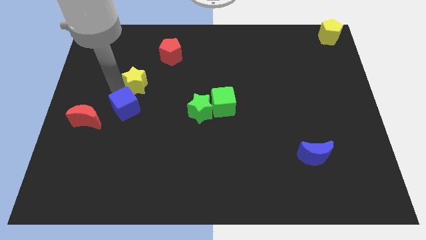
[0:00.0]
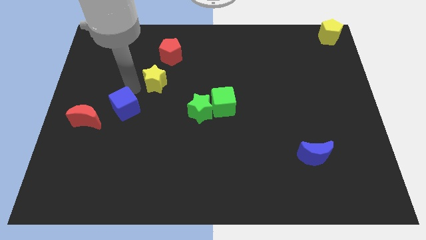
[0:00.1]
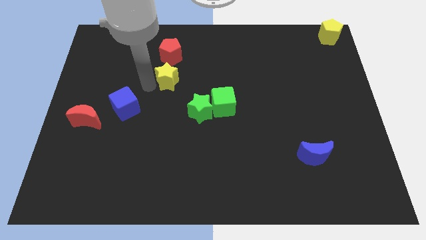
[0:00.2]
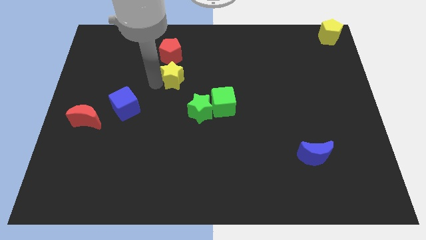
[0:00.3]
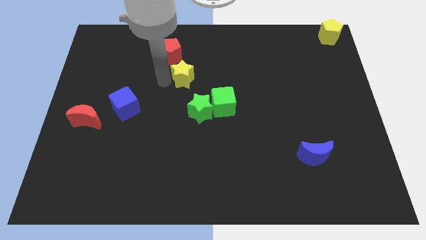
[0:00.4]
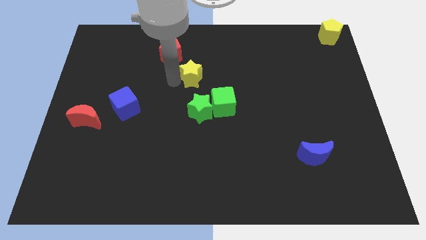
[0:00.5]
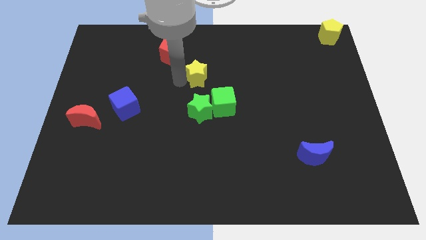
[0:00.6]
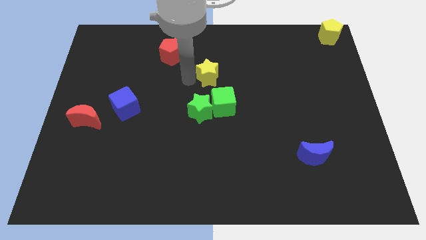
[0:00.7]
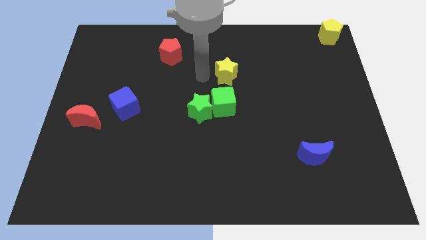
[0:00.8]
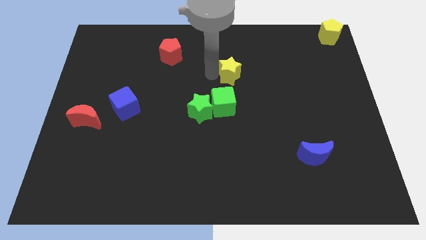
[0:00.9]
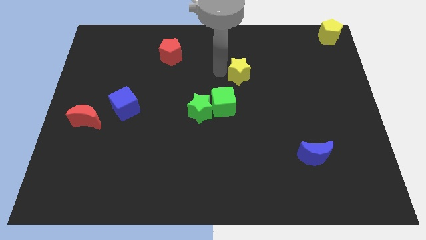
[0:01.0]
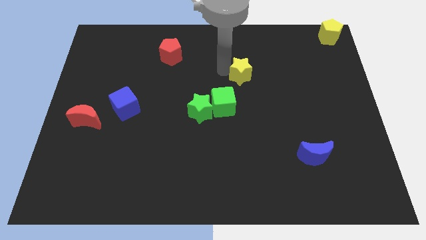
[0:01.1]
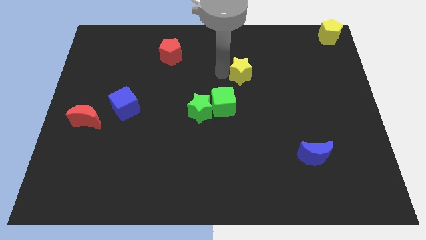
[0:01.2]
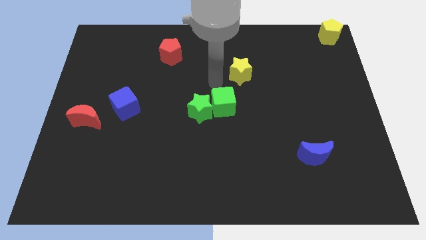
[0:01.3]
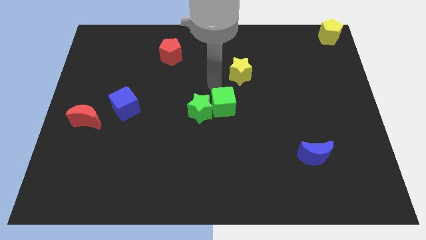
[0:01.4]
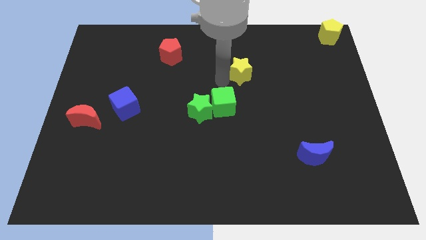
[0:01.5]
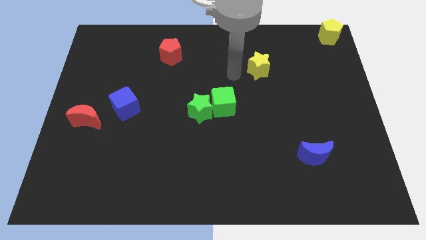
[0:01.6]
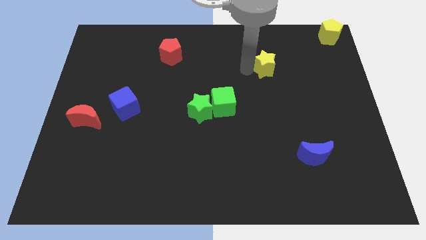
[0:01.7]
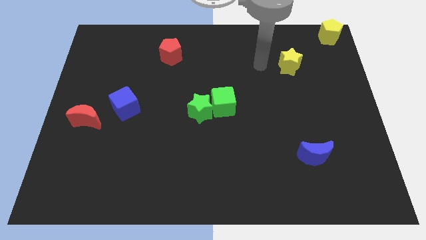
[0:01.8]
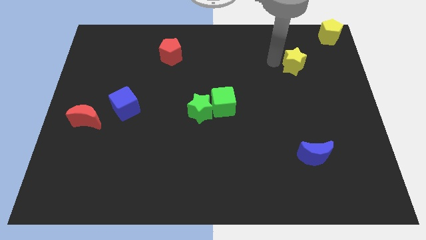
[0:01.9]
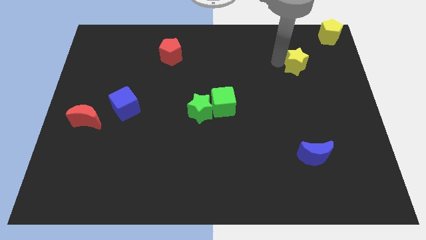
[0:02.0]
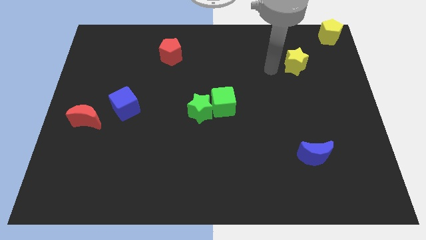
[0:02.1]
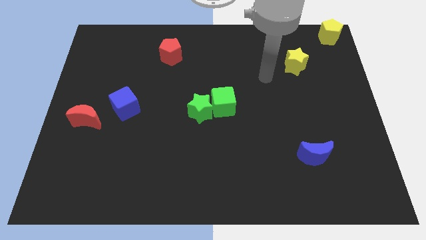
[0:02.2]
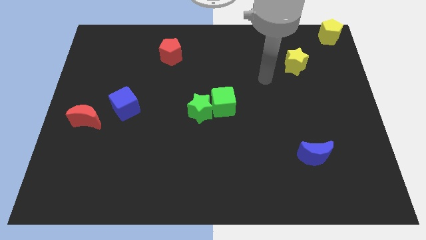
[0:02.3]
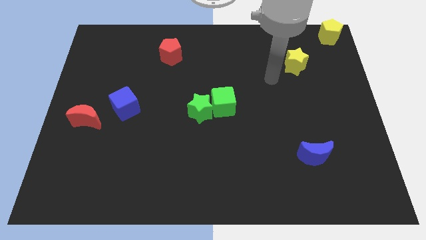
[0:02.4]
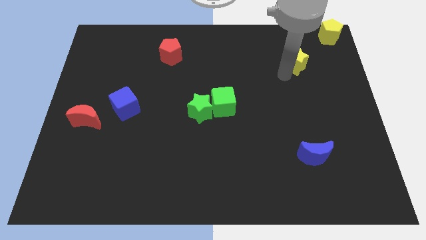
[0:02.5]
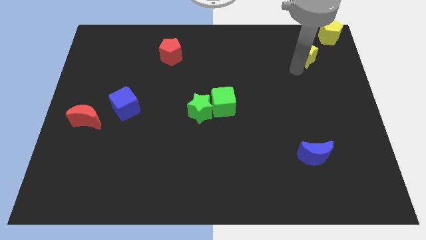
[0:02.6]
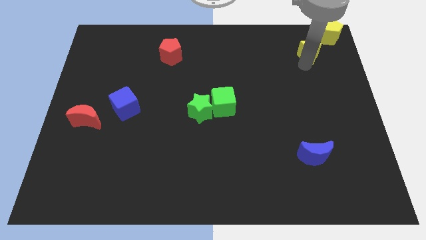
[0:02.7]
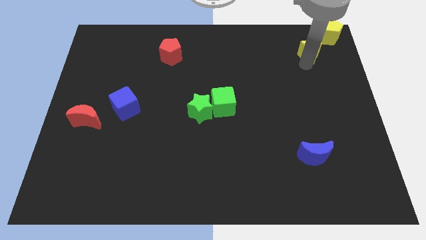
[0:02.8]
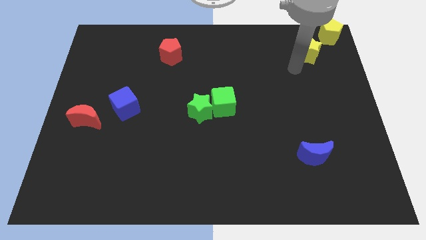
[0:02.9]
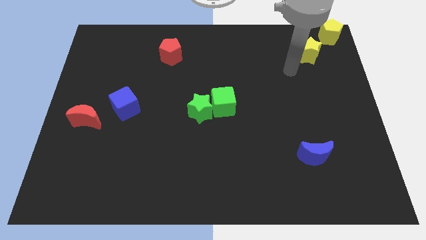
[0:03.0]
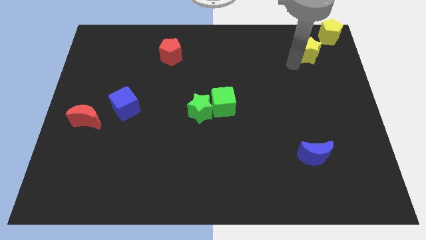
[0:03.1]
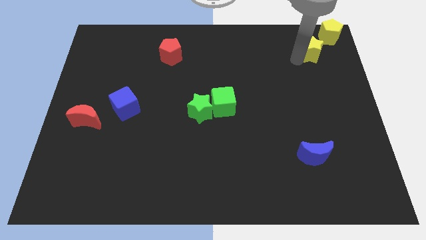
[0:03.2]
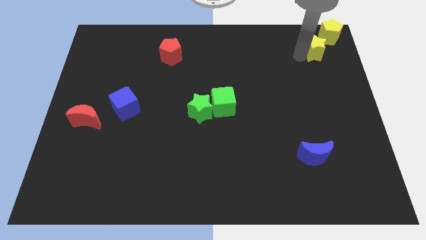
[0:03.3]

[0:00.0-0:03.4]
separate the yellow star from the blue cube

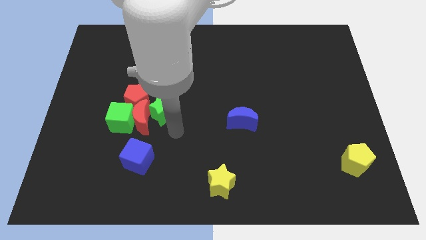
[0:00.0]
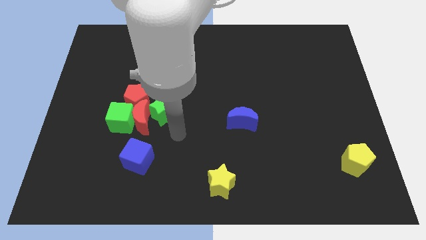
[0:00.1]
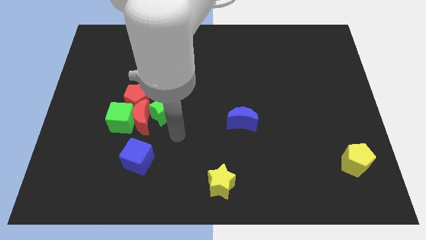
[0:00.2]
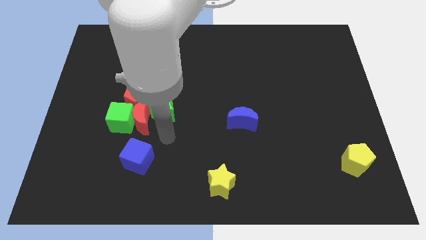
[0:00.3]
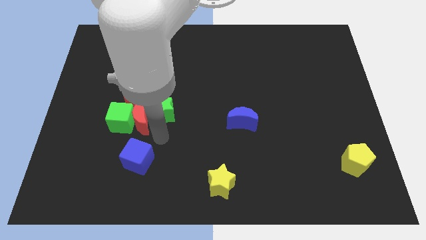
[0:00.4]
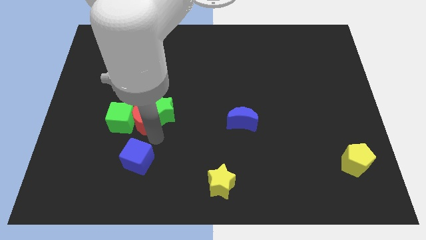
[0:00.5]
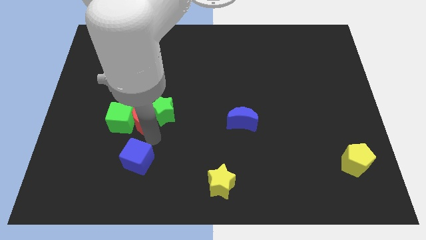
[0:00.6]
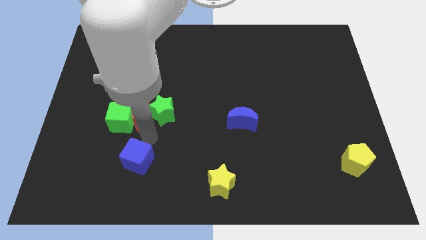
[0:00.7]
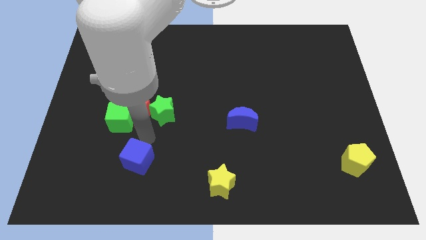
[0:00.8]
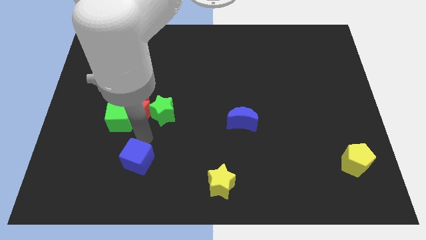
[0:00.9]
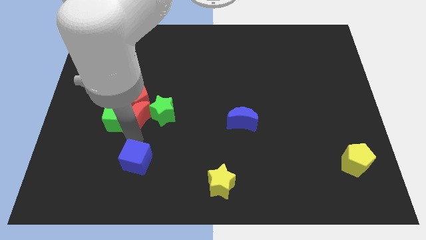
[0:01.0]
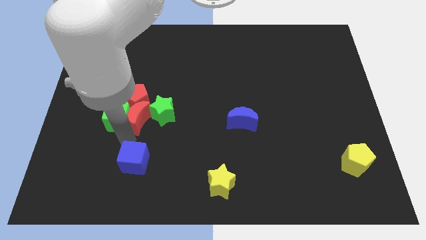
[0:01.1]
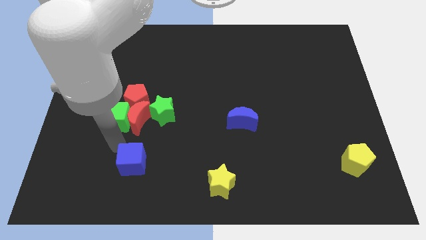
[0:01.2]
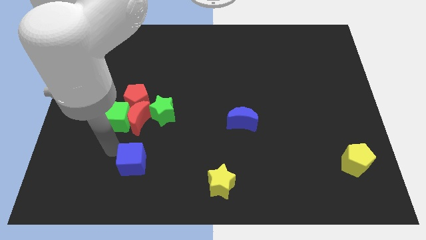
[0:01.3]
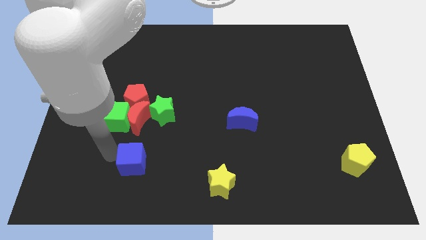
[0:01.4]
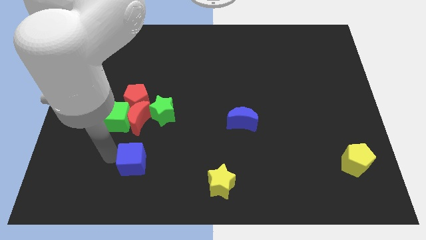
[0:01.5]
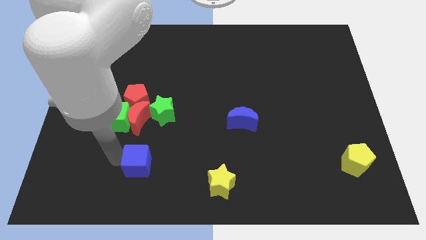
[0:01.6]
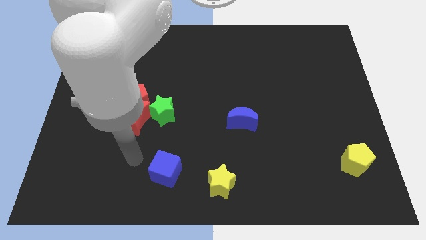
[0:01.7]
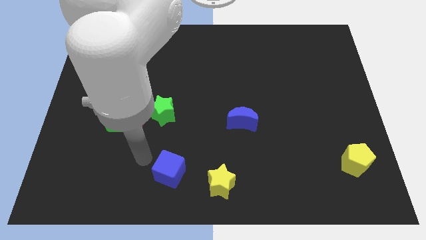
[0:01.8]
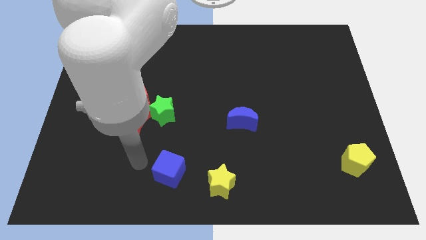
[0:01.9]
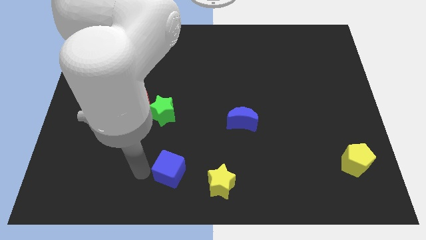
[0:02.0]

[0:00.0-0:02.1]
move blue cube towards yellow star

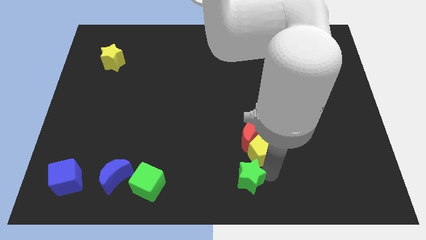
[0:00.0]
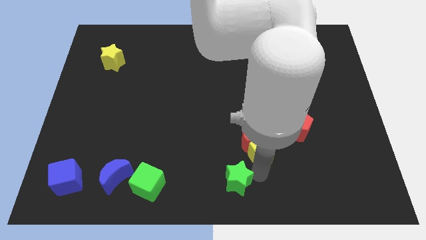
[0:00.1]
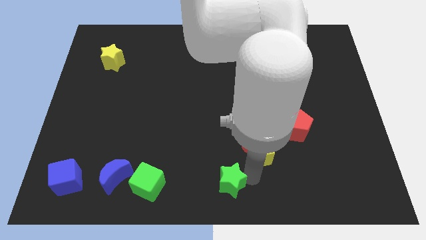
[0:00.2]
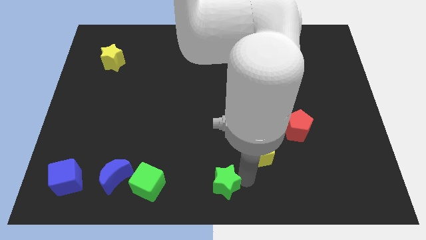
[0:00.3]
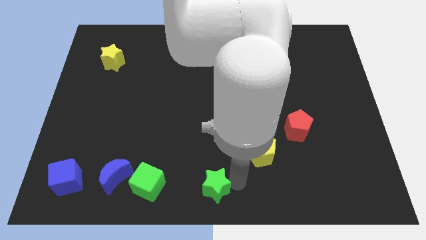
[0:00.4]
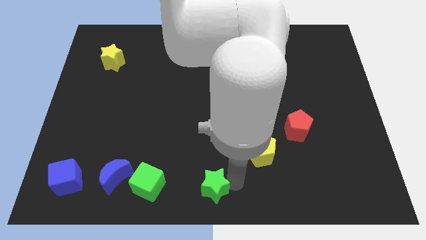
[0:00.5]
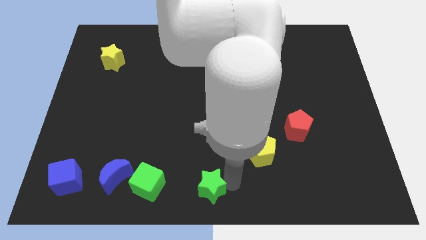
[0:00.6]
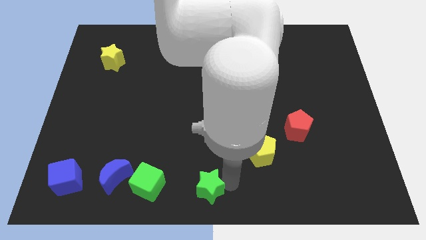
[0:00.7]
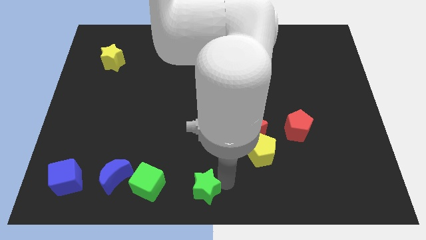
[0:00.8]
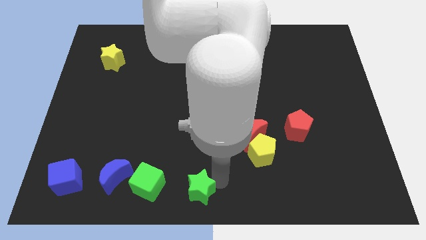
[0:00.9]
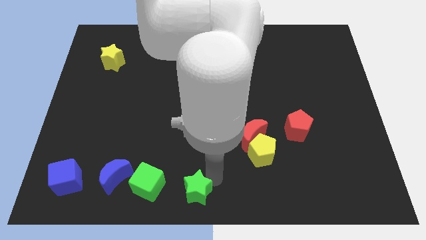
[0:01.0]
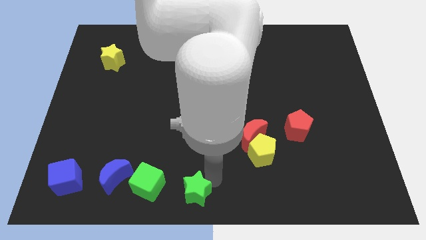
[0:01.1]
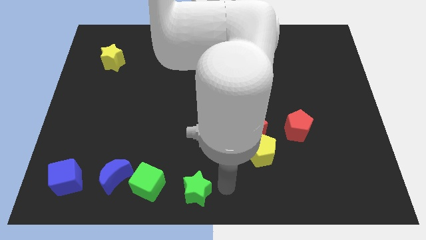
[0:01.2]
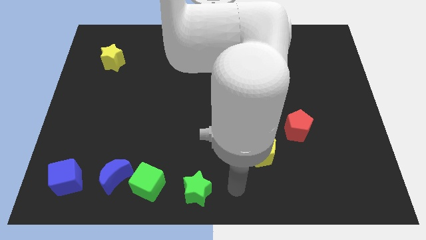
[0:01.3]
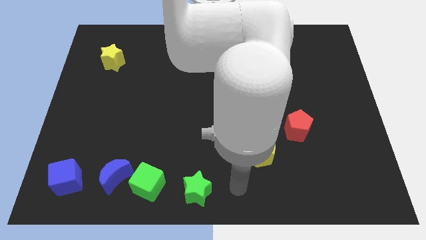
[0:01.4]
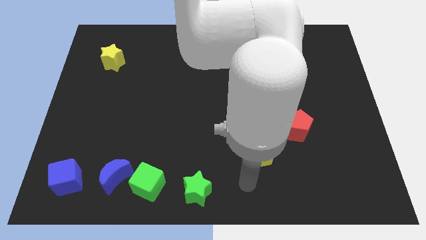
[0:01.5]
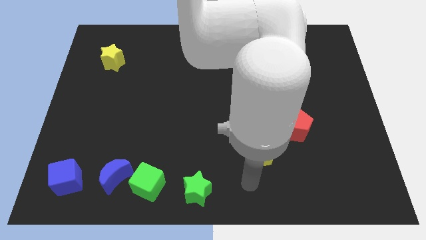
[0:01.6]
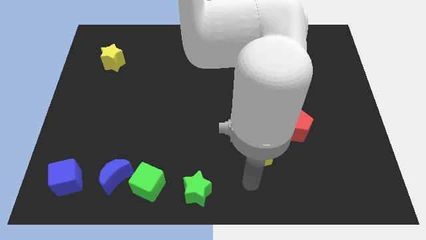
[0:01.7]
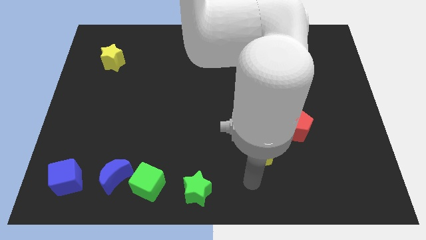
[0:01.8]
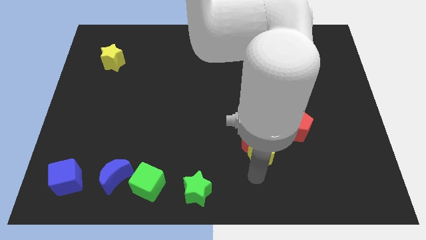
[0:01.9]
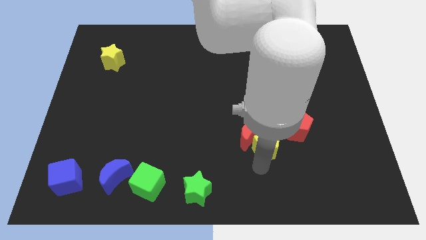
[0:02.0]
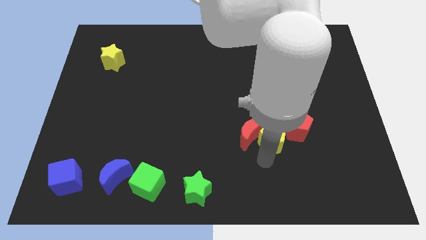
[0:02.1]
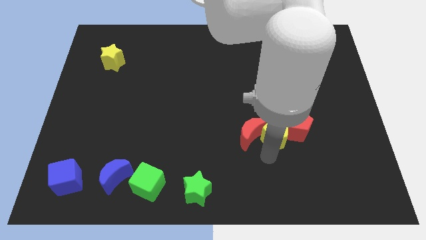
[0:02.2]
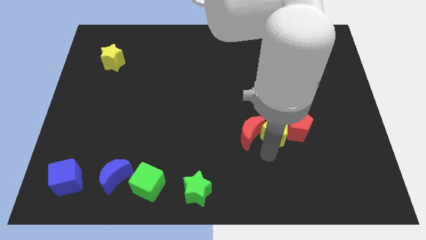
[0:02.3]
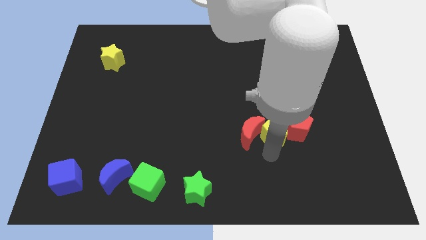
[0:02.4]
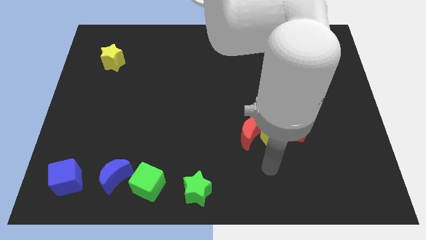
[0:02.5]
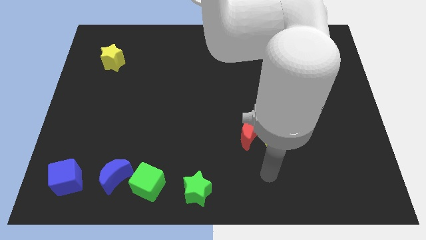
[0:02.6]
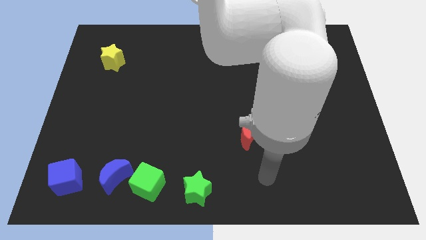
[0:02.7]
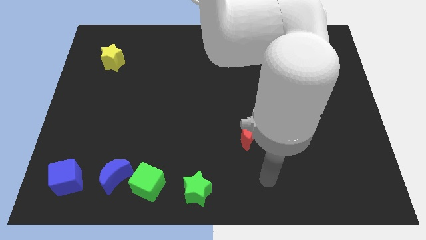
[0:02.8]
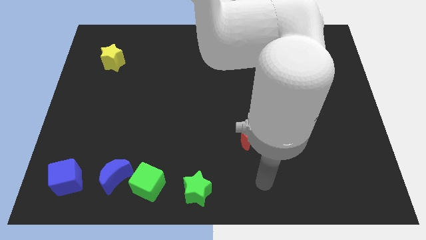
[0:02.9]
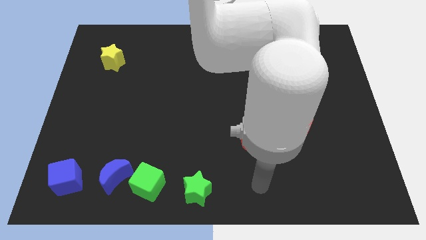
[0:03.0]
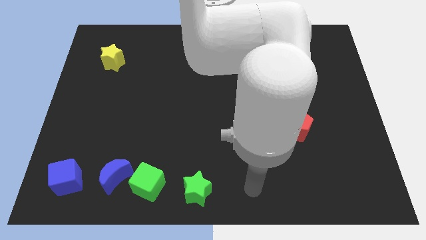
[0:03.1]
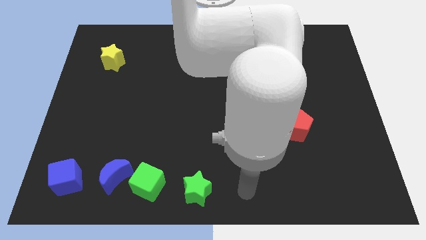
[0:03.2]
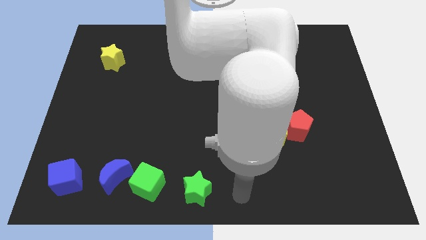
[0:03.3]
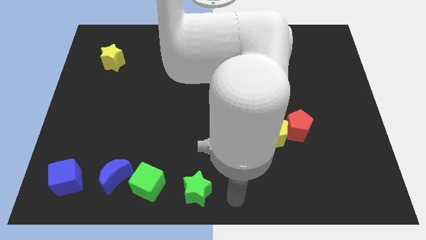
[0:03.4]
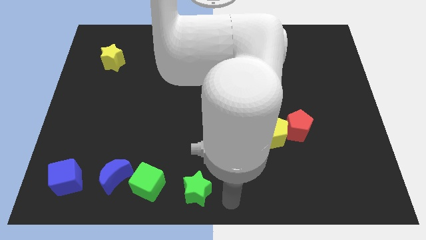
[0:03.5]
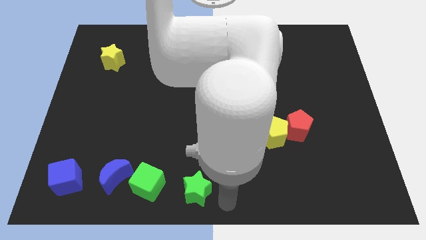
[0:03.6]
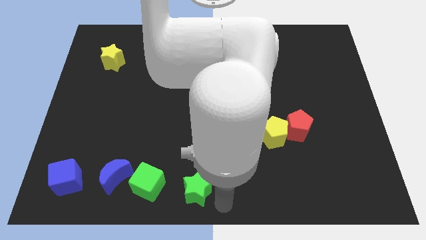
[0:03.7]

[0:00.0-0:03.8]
separate the green star and the yellow pentagon
